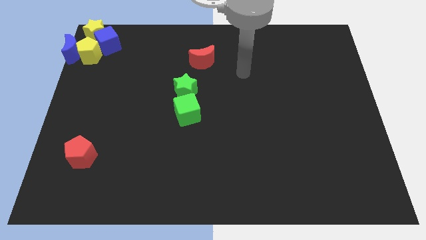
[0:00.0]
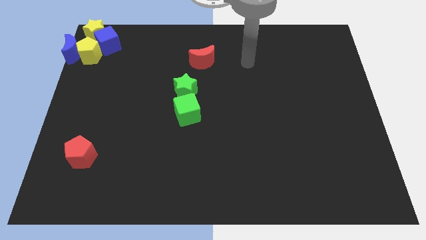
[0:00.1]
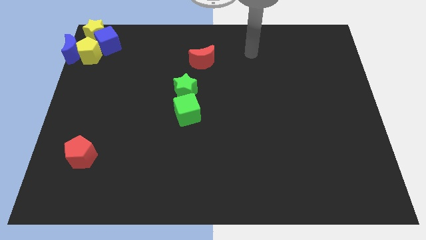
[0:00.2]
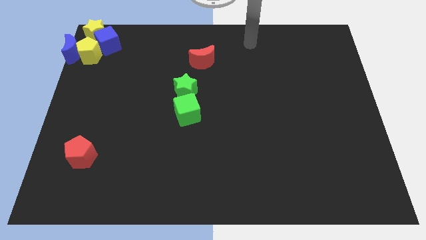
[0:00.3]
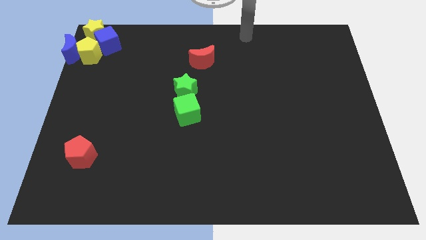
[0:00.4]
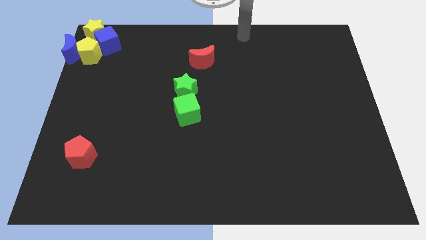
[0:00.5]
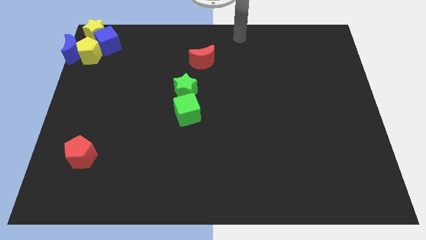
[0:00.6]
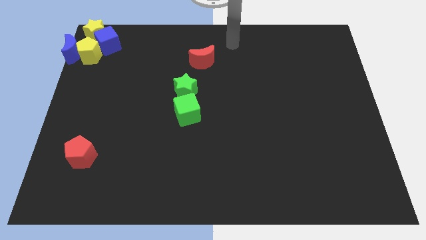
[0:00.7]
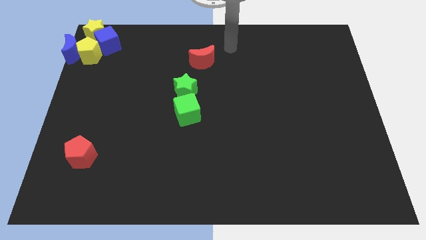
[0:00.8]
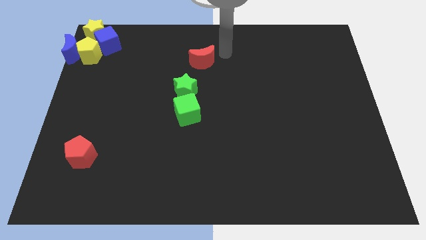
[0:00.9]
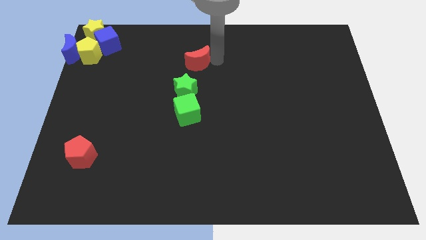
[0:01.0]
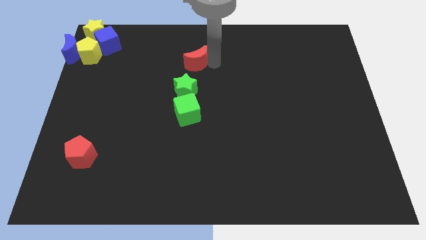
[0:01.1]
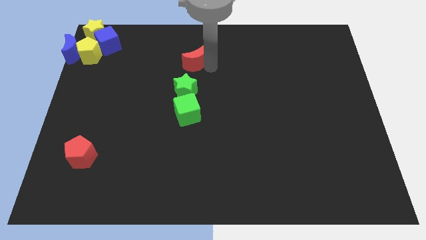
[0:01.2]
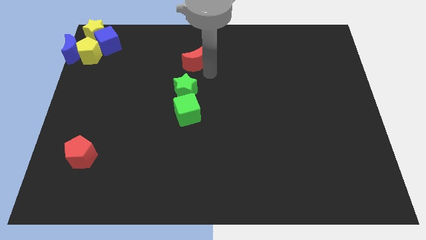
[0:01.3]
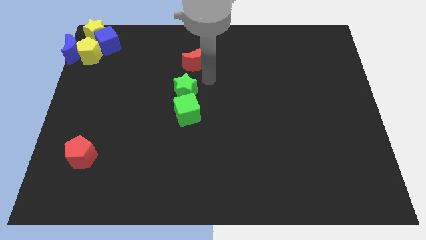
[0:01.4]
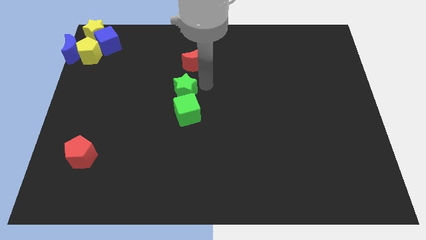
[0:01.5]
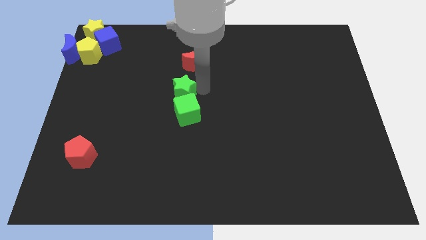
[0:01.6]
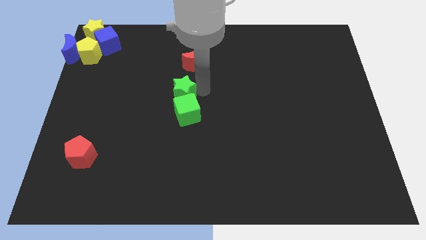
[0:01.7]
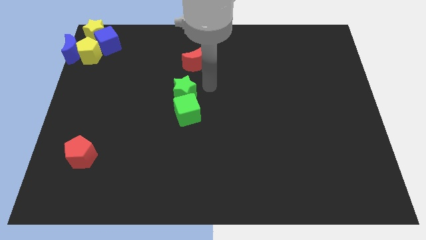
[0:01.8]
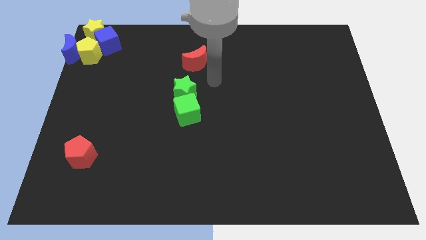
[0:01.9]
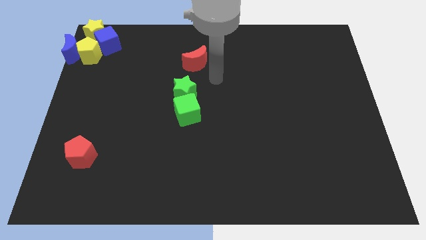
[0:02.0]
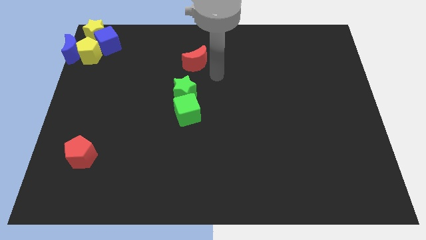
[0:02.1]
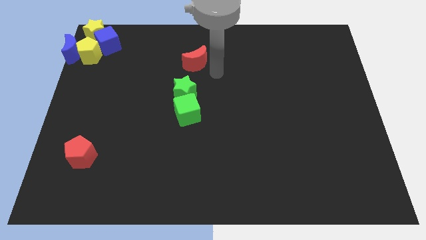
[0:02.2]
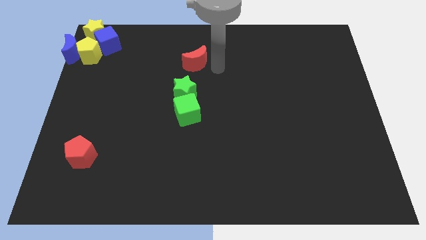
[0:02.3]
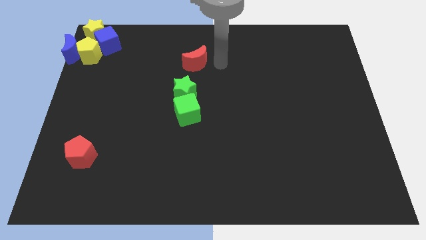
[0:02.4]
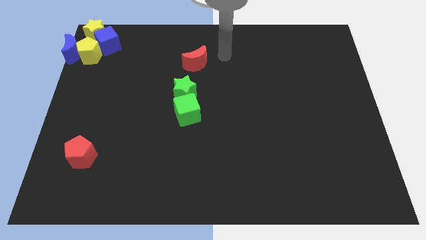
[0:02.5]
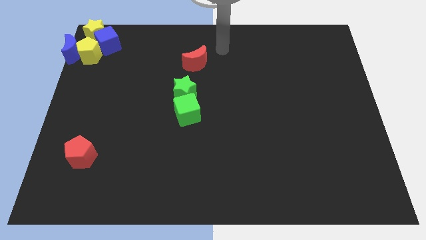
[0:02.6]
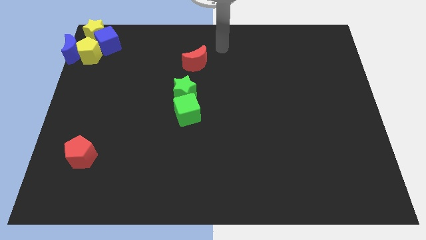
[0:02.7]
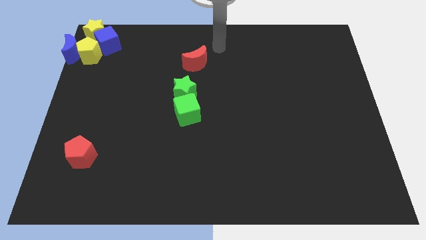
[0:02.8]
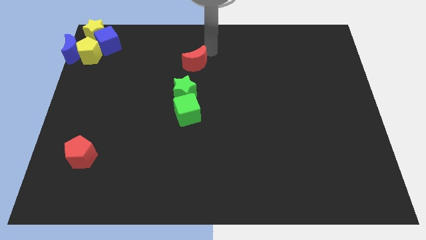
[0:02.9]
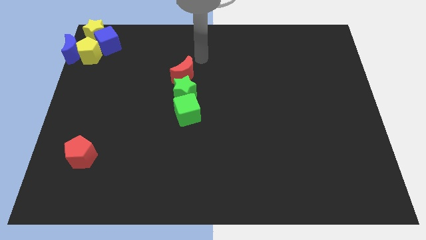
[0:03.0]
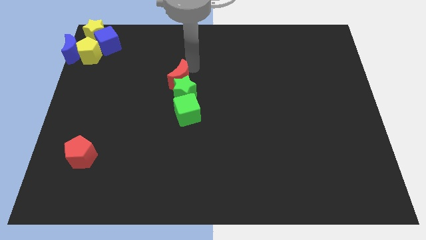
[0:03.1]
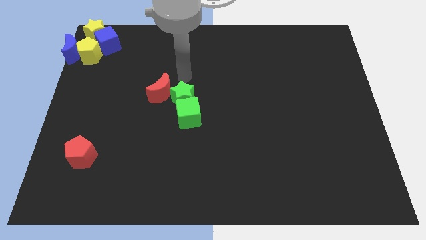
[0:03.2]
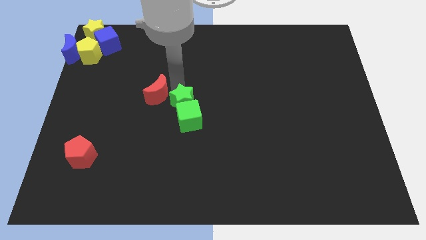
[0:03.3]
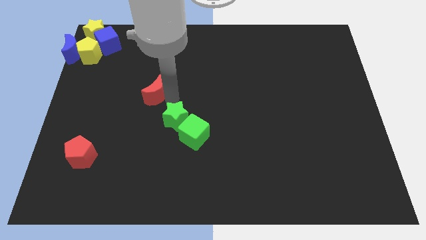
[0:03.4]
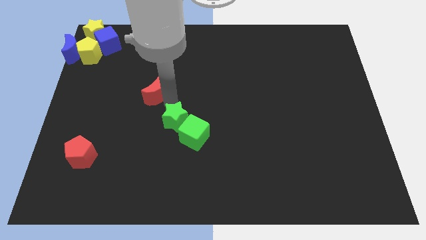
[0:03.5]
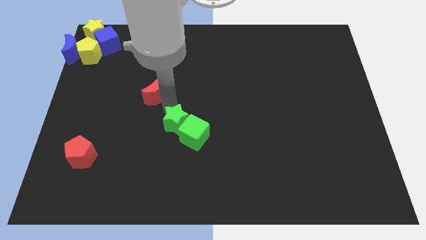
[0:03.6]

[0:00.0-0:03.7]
place the red moon diagonal to the red pentagon

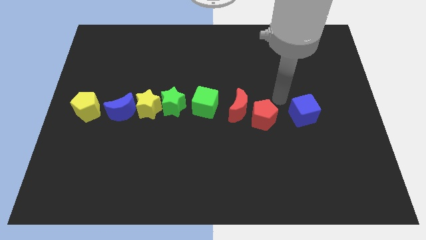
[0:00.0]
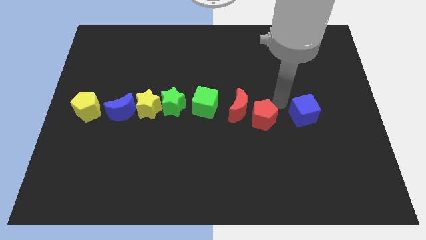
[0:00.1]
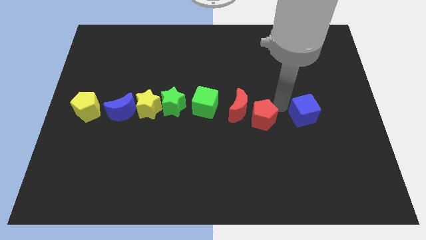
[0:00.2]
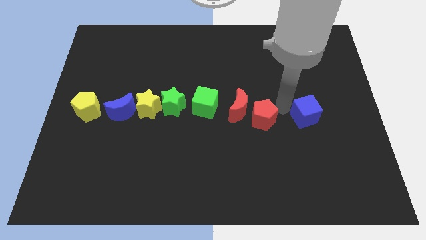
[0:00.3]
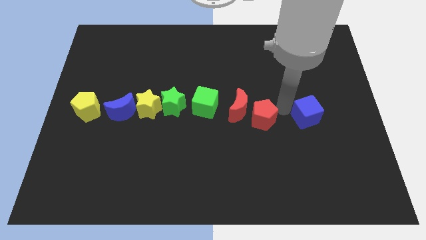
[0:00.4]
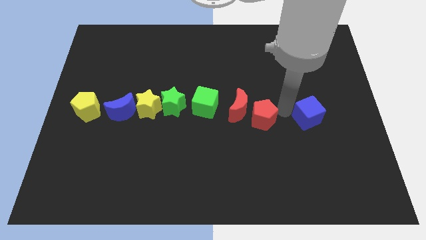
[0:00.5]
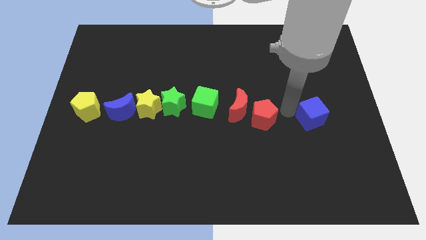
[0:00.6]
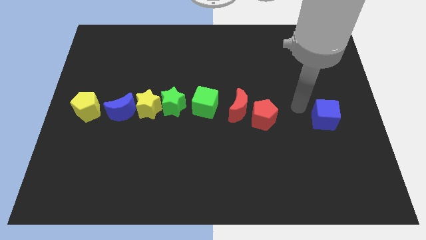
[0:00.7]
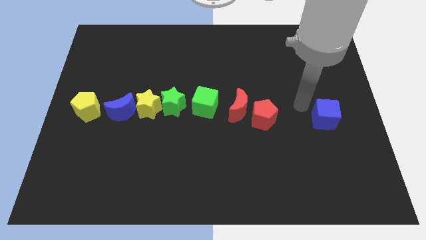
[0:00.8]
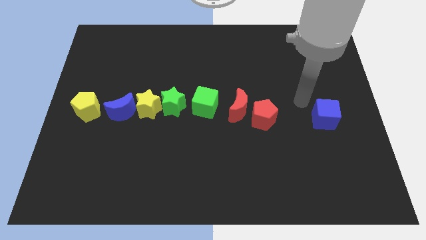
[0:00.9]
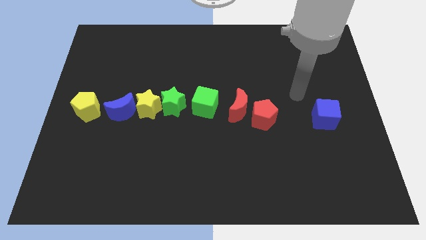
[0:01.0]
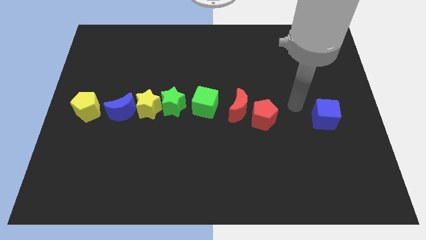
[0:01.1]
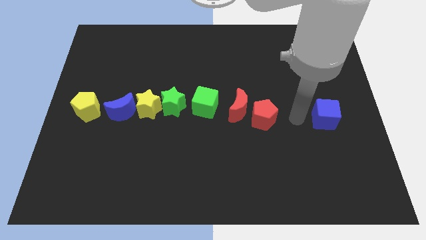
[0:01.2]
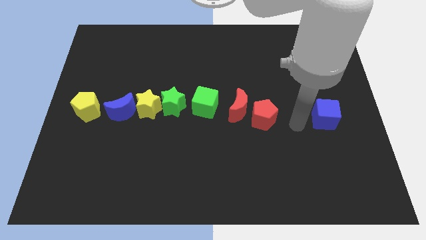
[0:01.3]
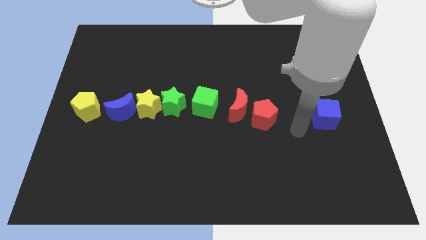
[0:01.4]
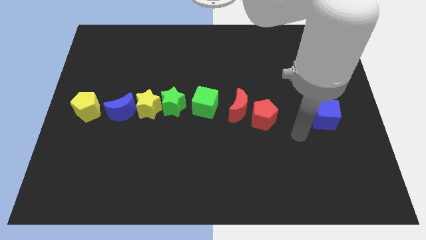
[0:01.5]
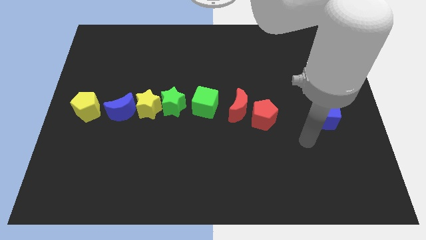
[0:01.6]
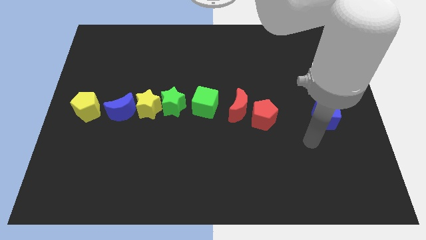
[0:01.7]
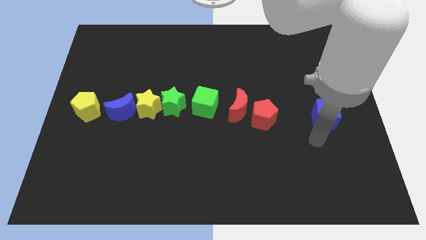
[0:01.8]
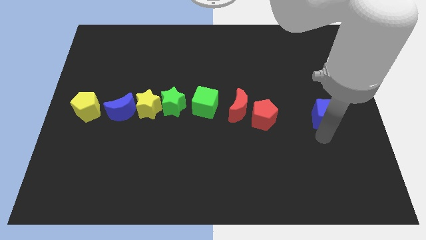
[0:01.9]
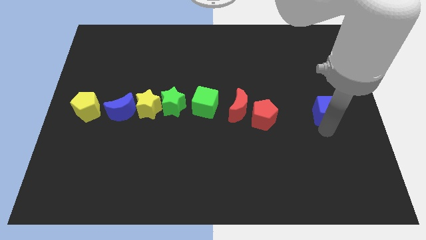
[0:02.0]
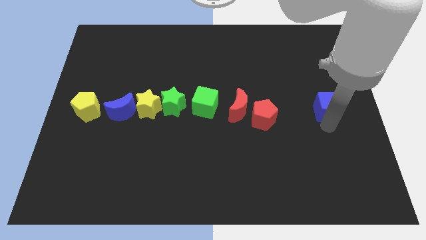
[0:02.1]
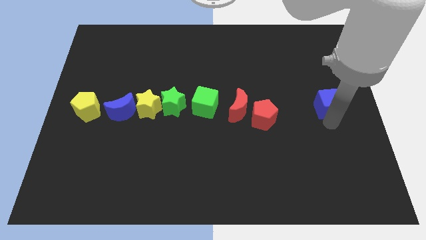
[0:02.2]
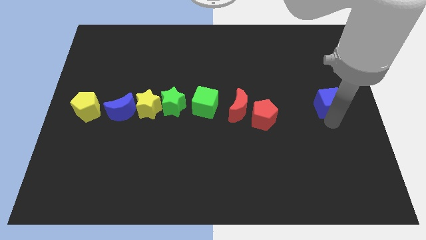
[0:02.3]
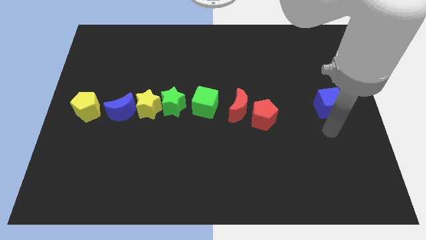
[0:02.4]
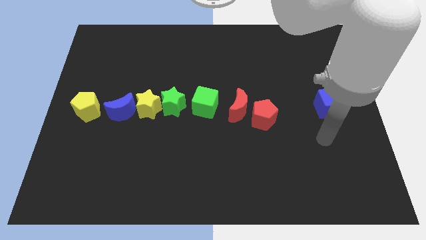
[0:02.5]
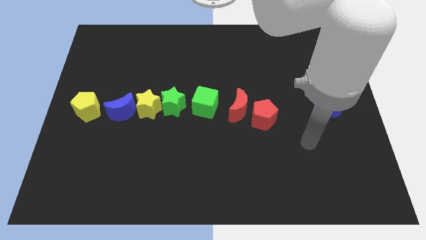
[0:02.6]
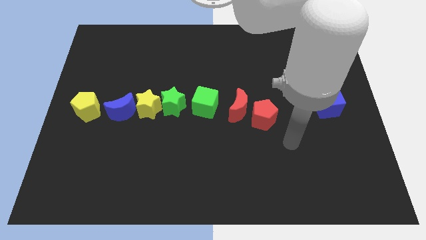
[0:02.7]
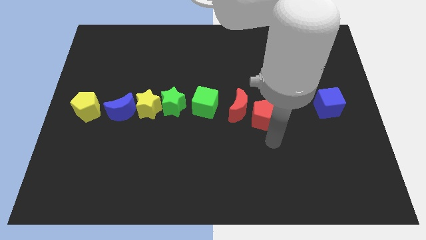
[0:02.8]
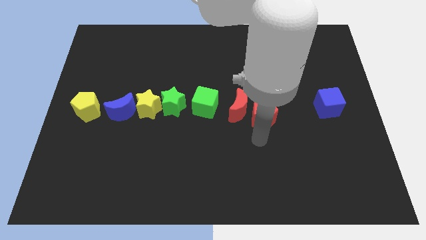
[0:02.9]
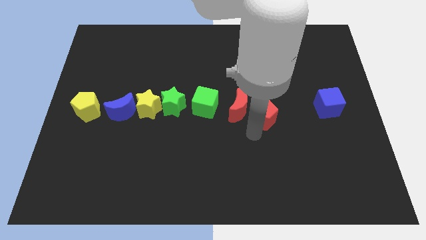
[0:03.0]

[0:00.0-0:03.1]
push the blue cube to the right side of the board

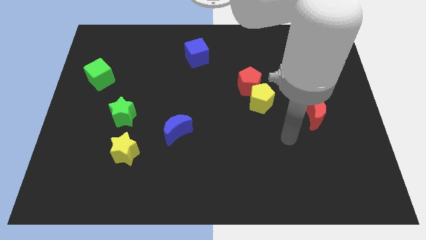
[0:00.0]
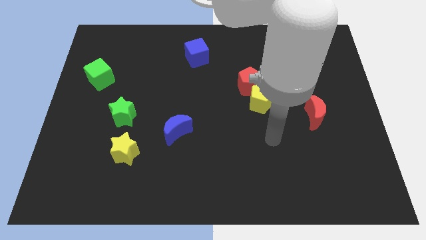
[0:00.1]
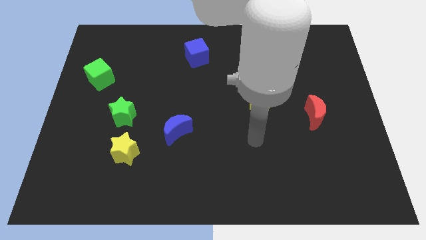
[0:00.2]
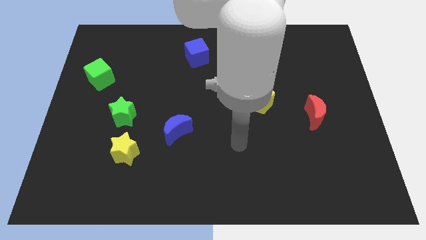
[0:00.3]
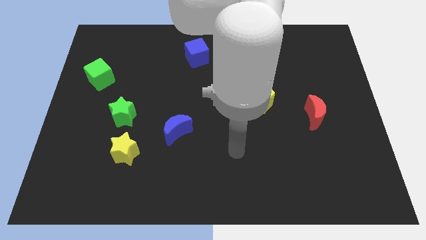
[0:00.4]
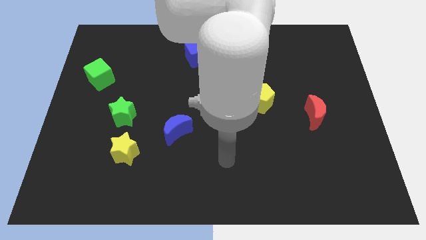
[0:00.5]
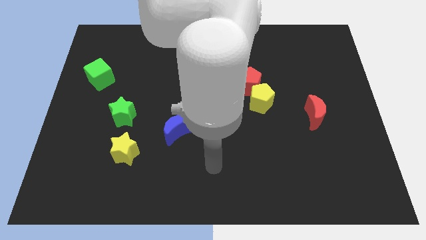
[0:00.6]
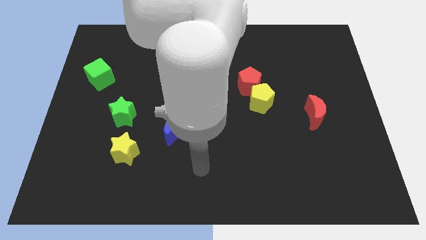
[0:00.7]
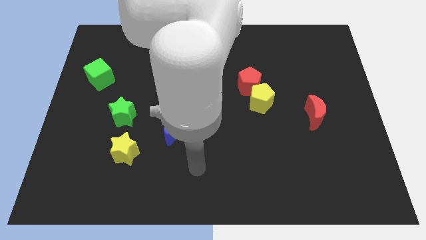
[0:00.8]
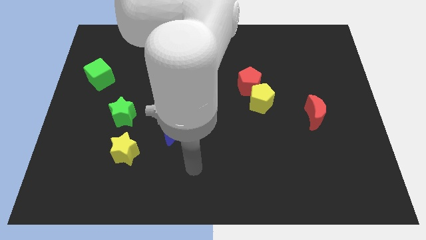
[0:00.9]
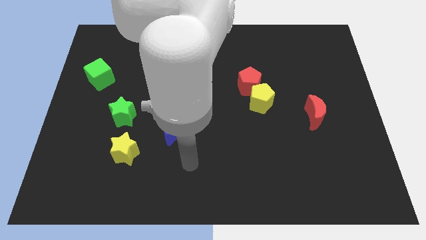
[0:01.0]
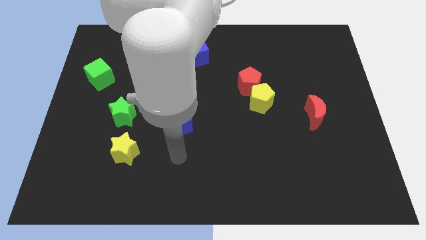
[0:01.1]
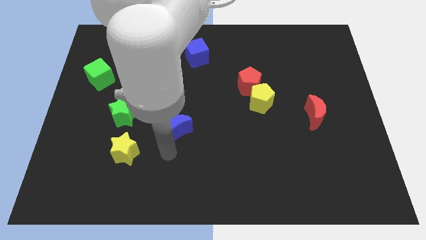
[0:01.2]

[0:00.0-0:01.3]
point your arm at the bottom of the blue crescent

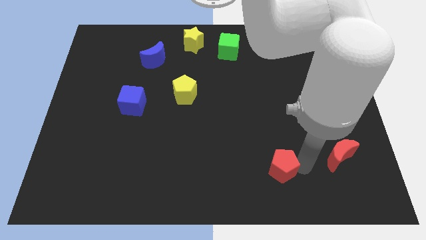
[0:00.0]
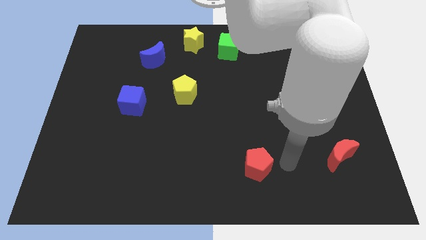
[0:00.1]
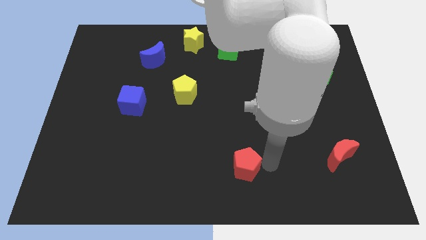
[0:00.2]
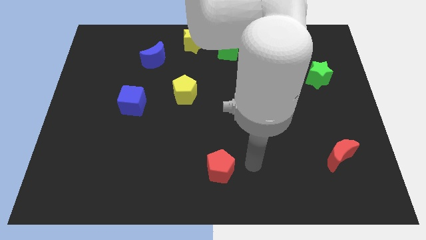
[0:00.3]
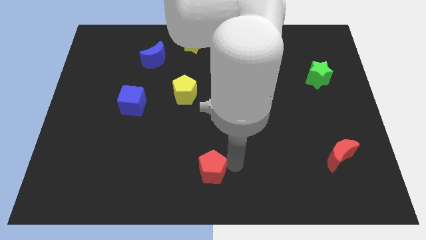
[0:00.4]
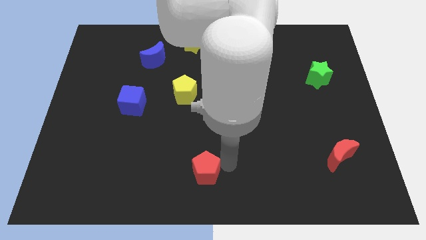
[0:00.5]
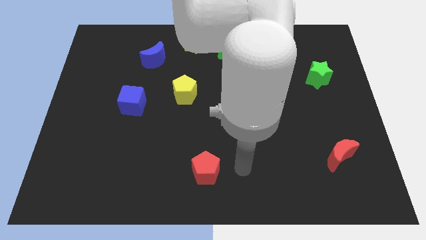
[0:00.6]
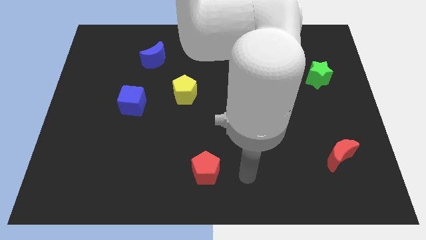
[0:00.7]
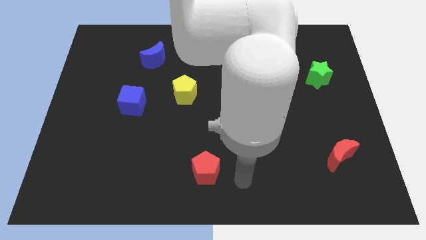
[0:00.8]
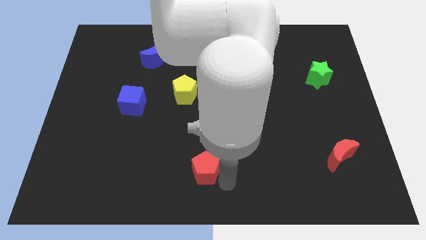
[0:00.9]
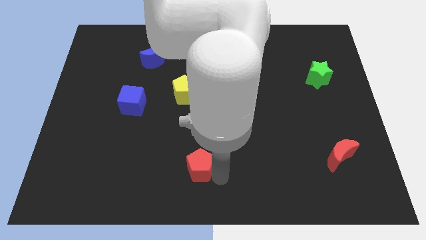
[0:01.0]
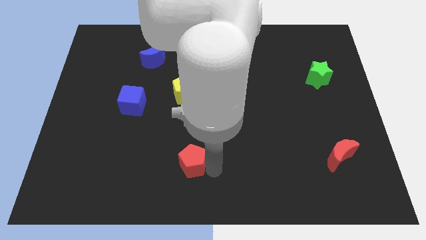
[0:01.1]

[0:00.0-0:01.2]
put the red pentagon vertically below the yellow pentagon
